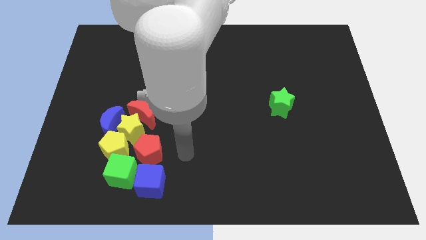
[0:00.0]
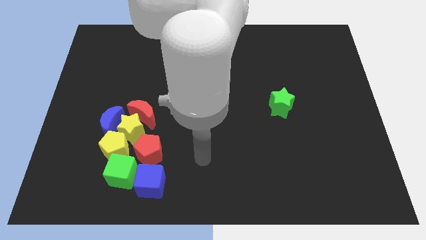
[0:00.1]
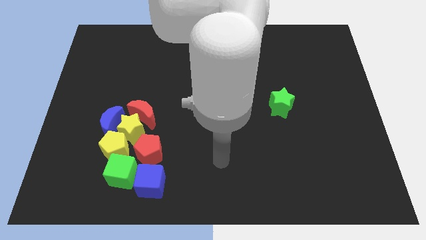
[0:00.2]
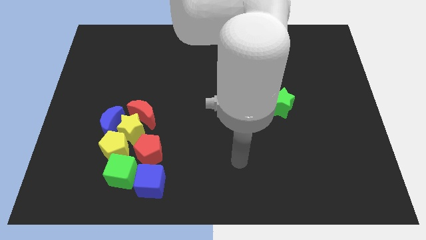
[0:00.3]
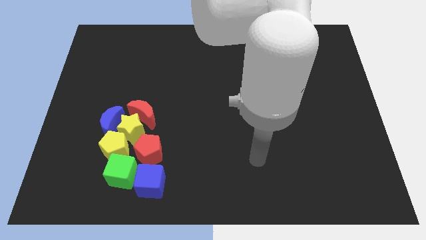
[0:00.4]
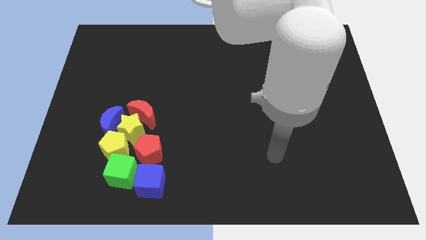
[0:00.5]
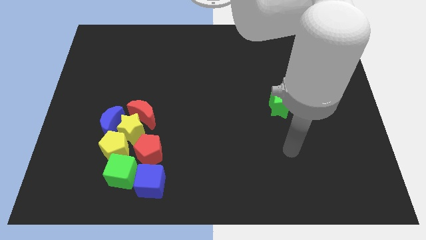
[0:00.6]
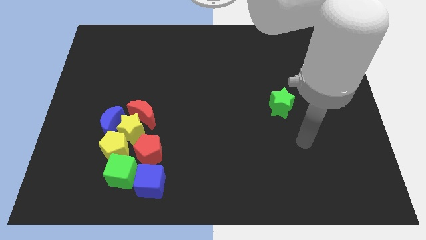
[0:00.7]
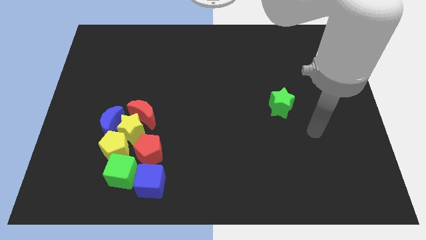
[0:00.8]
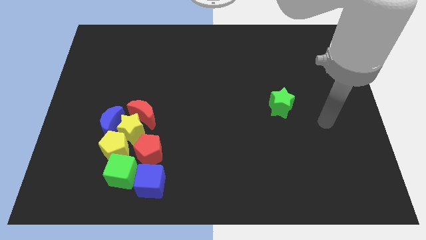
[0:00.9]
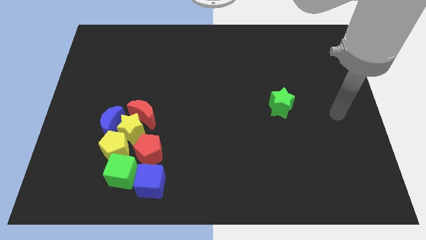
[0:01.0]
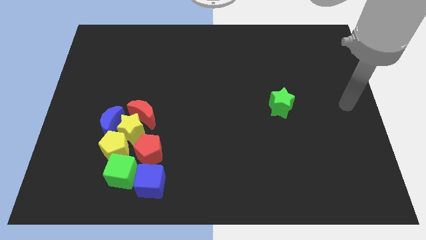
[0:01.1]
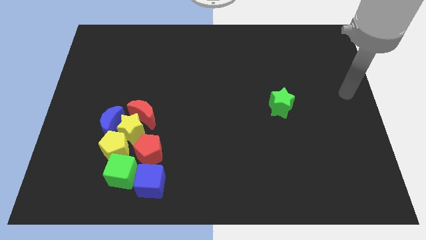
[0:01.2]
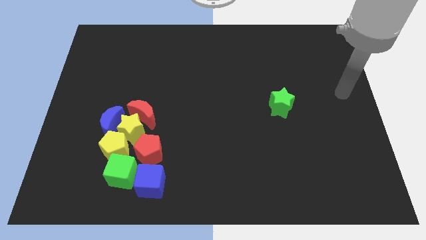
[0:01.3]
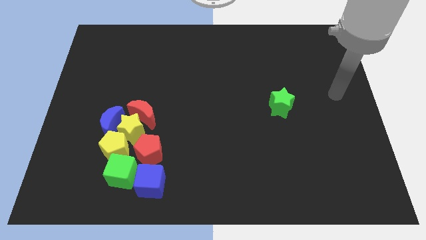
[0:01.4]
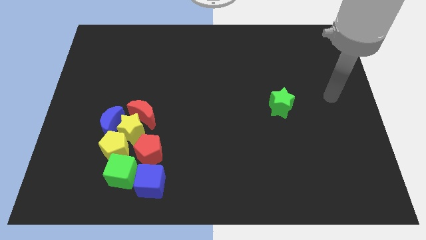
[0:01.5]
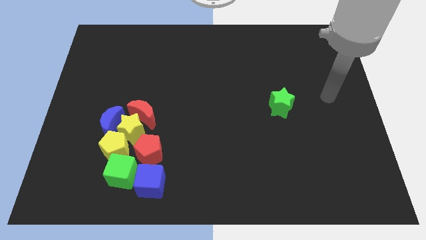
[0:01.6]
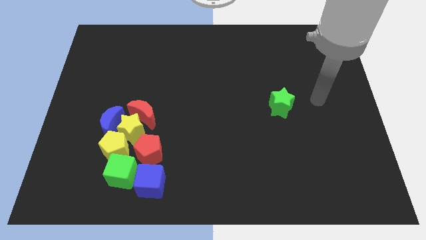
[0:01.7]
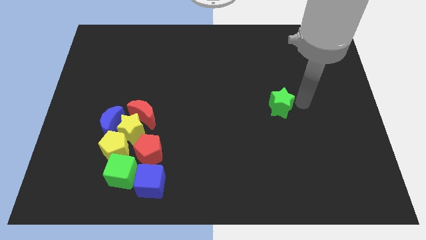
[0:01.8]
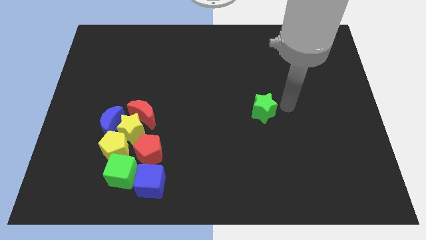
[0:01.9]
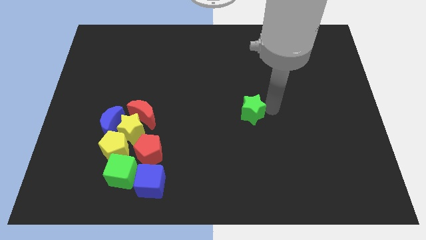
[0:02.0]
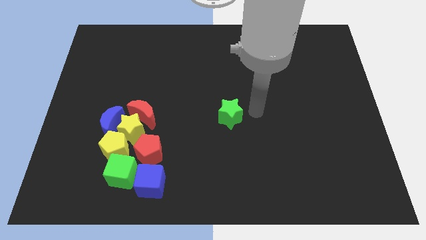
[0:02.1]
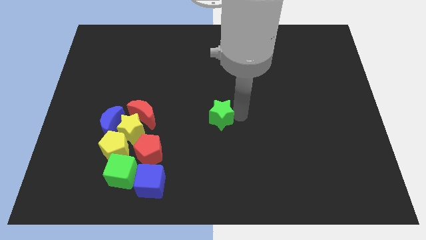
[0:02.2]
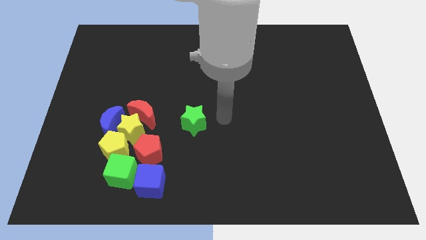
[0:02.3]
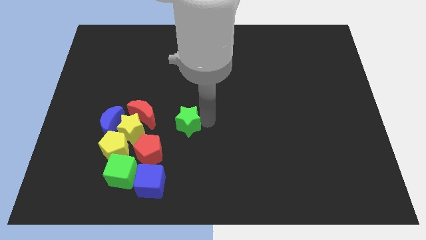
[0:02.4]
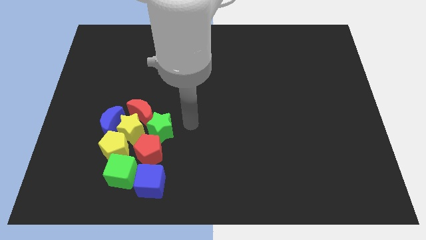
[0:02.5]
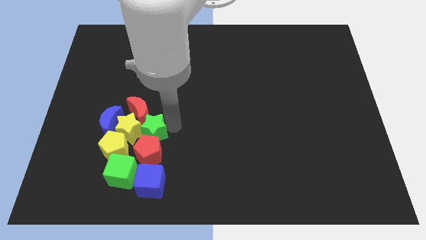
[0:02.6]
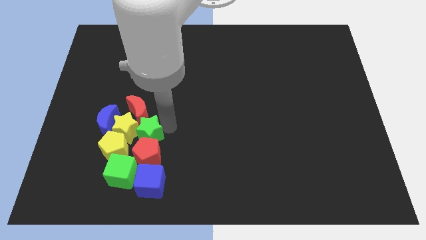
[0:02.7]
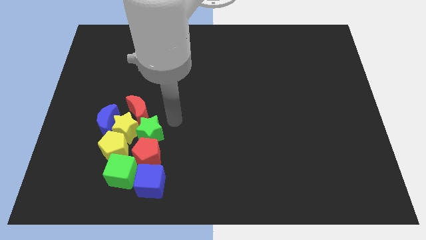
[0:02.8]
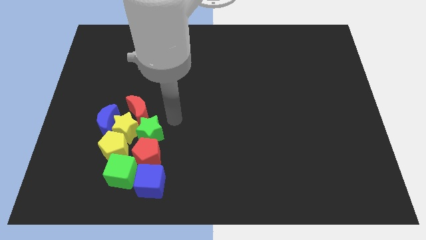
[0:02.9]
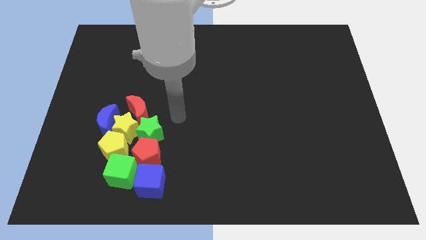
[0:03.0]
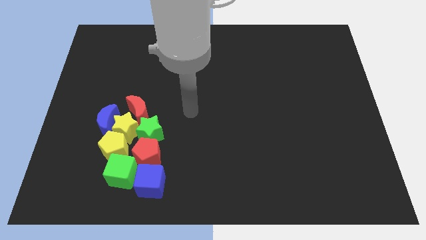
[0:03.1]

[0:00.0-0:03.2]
add the green star to the group up all the blocks

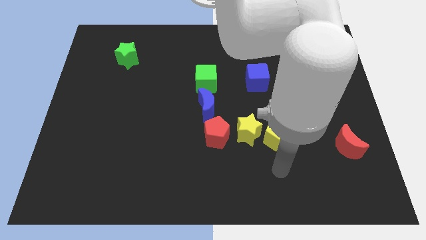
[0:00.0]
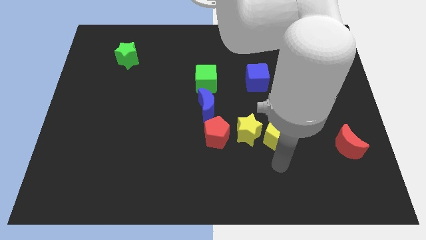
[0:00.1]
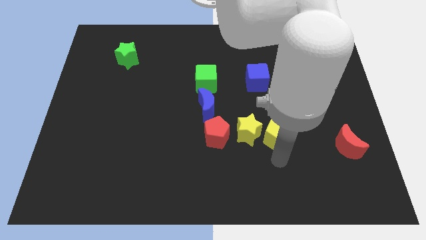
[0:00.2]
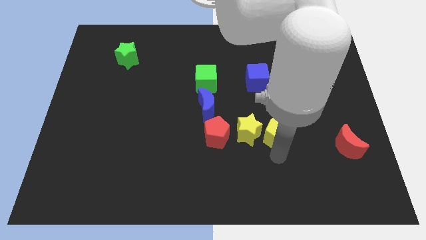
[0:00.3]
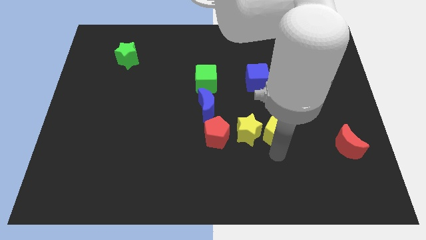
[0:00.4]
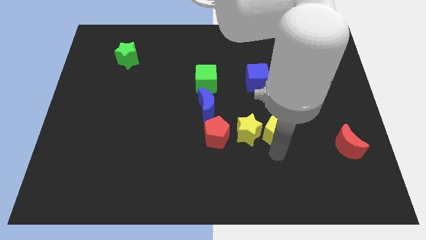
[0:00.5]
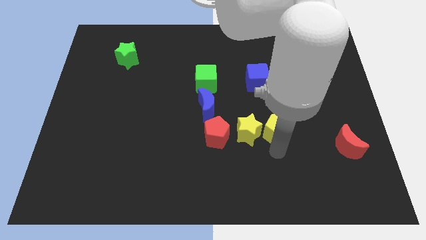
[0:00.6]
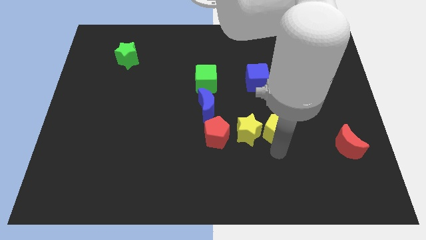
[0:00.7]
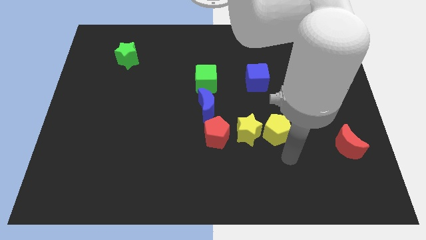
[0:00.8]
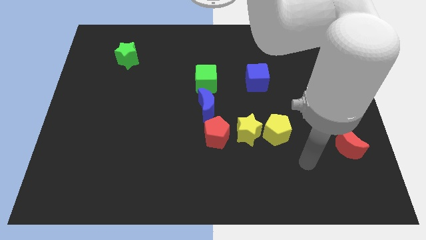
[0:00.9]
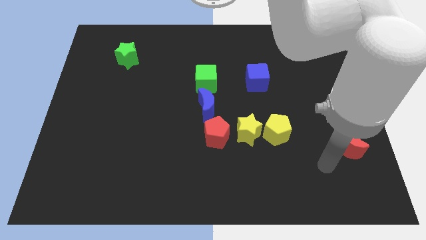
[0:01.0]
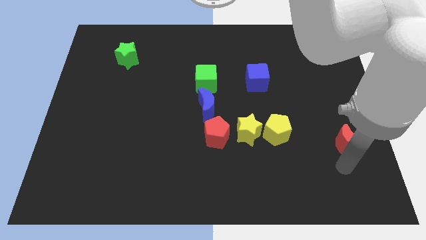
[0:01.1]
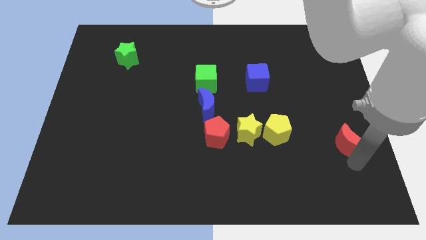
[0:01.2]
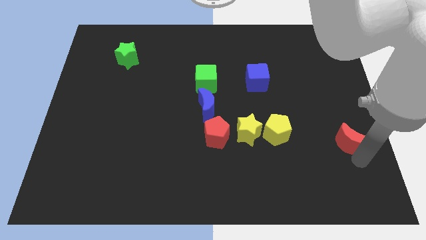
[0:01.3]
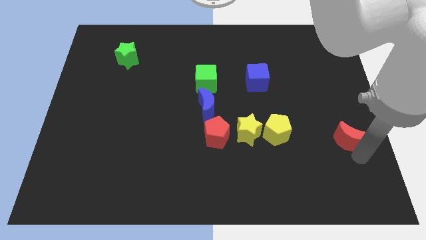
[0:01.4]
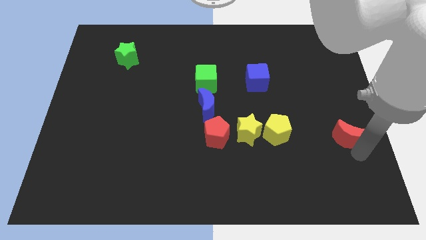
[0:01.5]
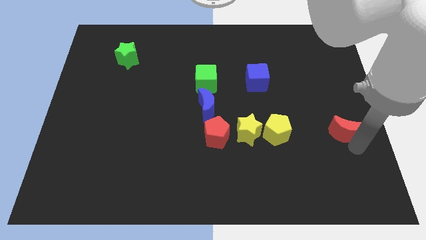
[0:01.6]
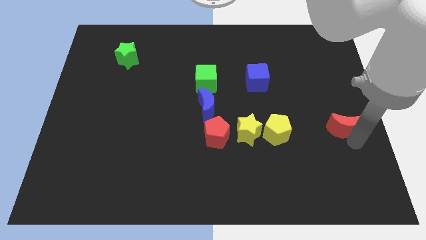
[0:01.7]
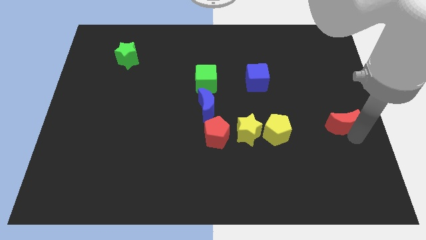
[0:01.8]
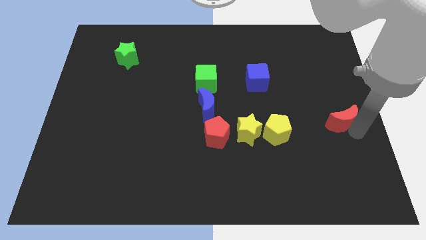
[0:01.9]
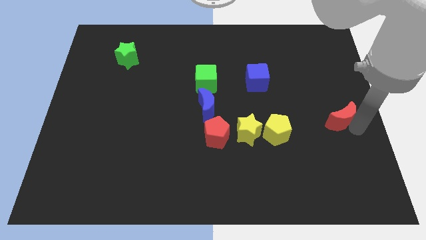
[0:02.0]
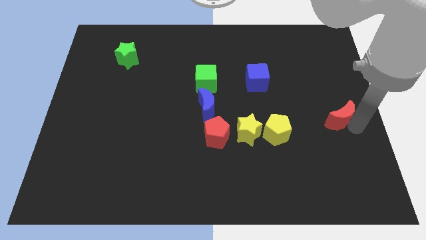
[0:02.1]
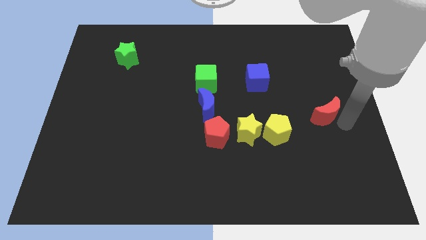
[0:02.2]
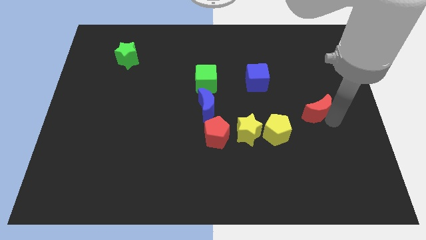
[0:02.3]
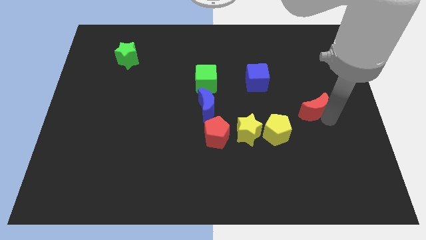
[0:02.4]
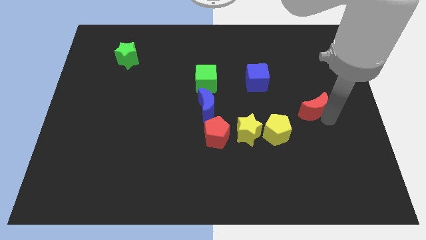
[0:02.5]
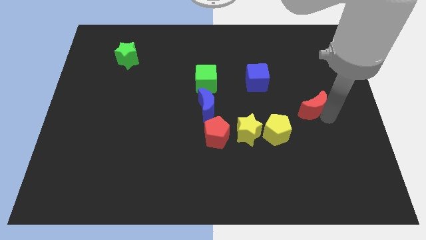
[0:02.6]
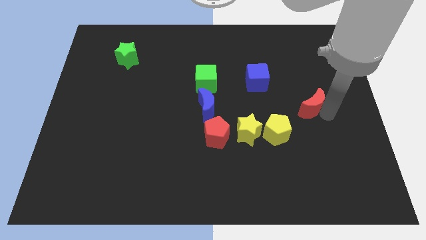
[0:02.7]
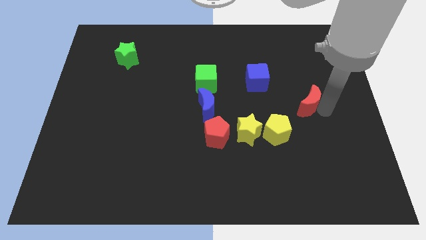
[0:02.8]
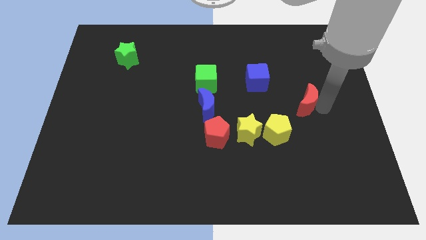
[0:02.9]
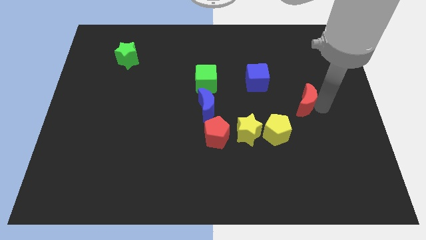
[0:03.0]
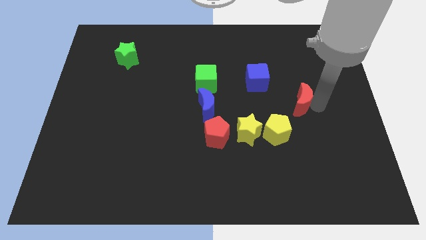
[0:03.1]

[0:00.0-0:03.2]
move the red moon up slightly

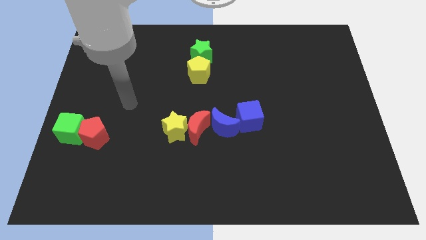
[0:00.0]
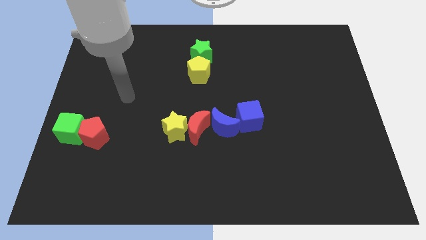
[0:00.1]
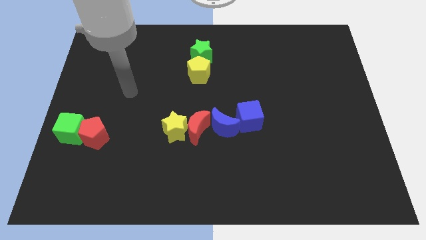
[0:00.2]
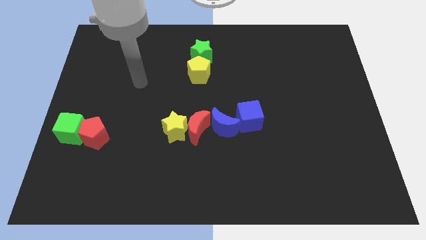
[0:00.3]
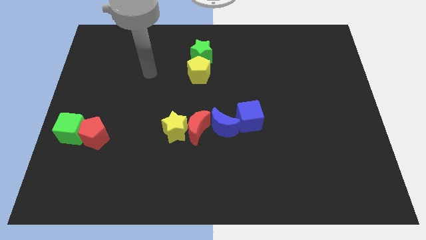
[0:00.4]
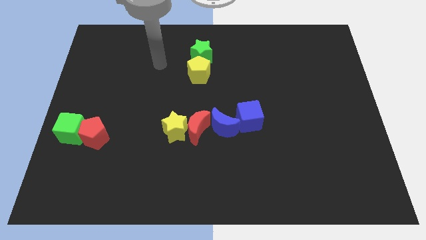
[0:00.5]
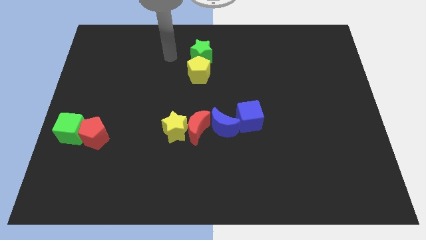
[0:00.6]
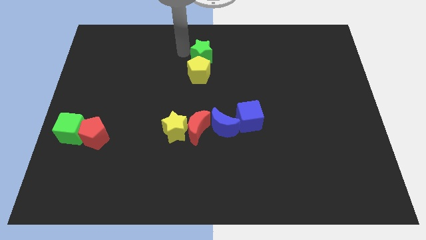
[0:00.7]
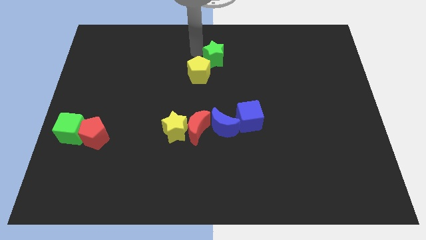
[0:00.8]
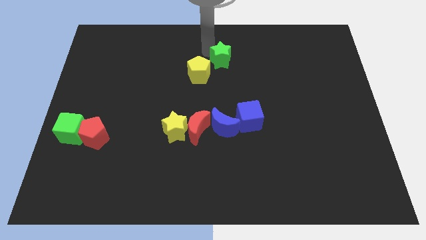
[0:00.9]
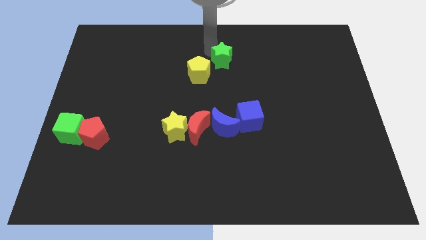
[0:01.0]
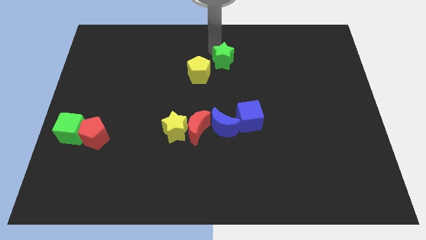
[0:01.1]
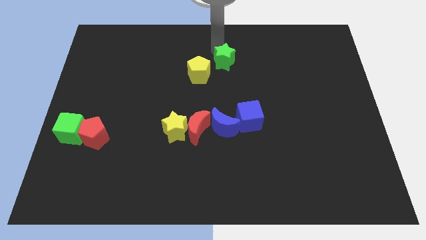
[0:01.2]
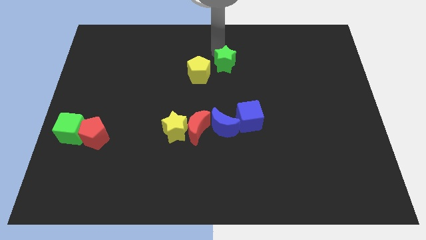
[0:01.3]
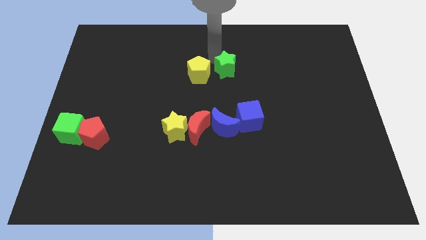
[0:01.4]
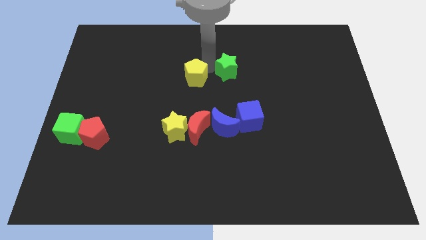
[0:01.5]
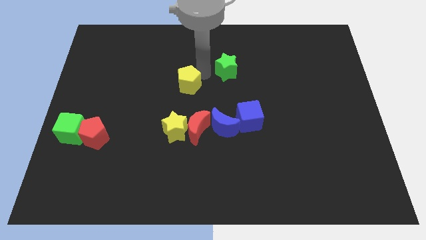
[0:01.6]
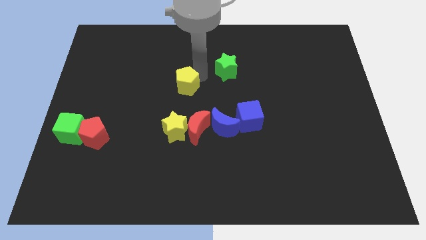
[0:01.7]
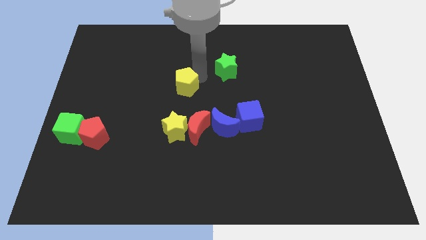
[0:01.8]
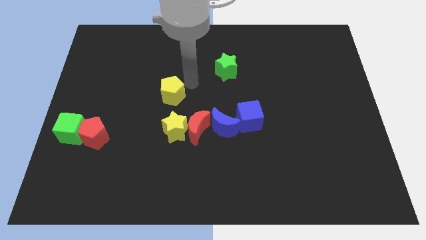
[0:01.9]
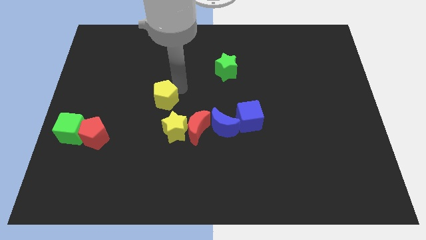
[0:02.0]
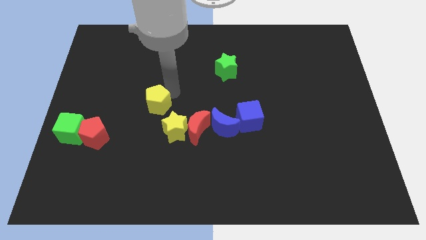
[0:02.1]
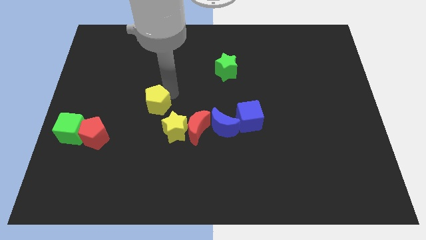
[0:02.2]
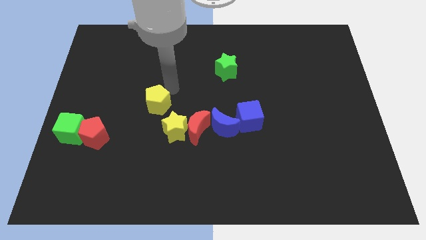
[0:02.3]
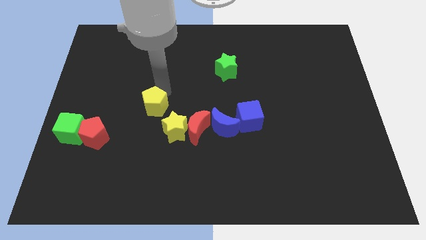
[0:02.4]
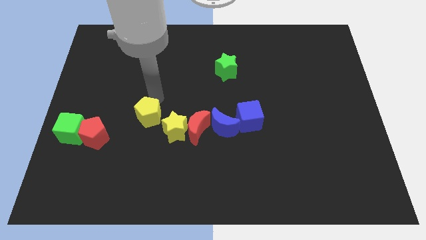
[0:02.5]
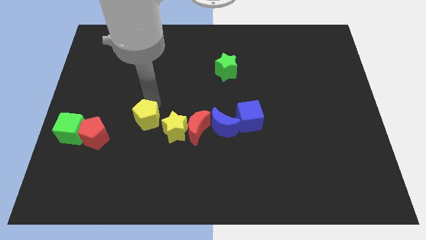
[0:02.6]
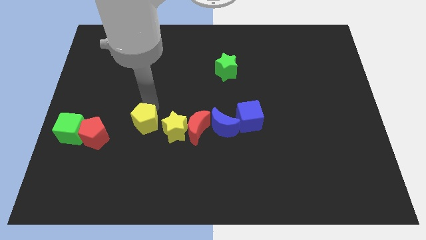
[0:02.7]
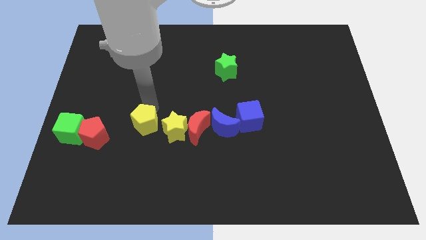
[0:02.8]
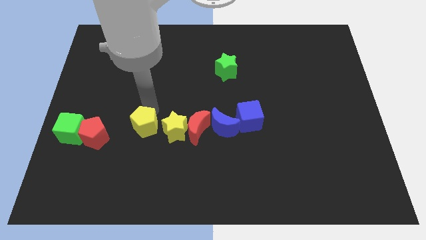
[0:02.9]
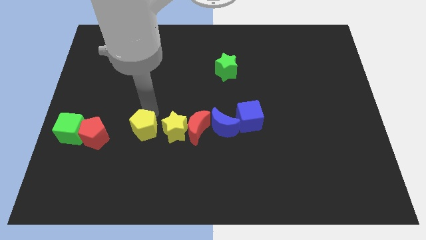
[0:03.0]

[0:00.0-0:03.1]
push the yellow pentagon on the left of the yellow star
